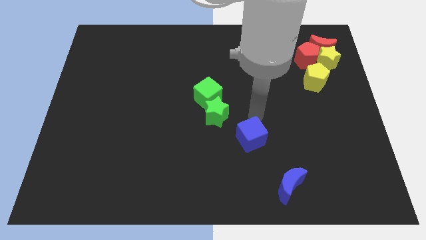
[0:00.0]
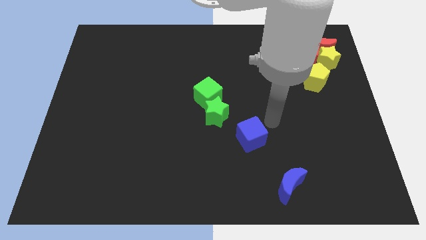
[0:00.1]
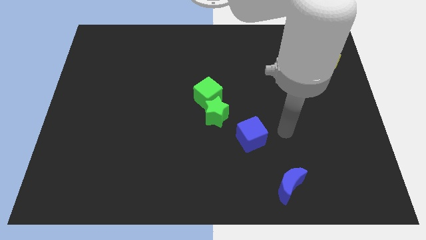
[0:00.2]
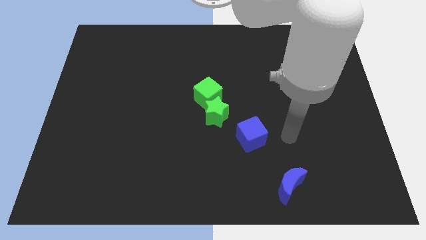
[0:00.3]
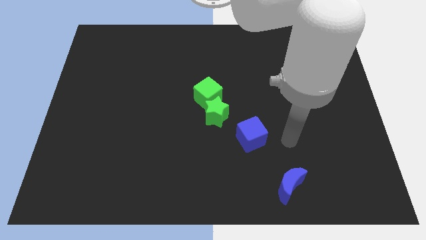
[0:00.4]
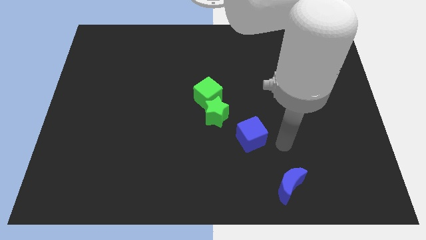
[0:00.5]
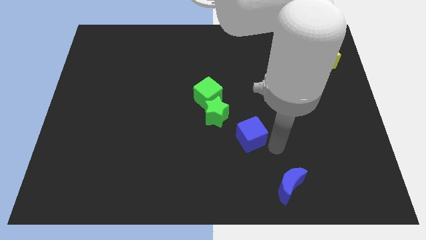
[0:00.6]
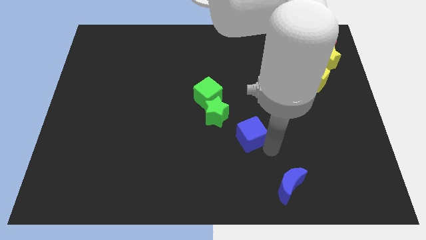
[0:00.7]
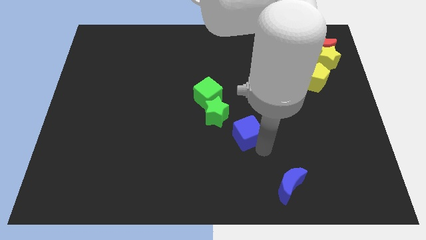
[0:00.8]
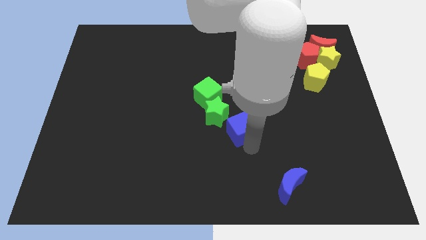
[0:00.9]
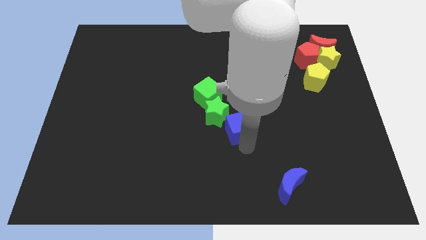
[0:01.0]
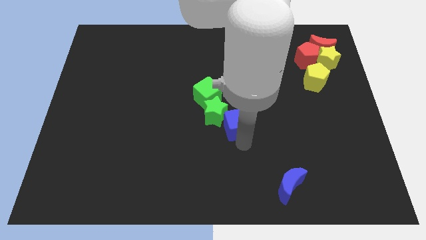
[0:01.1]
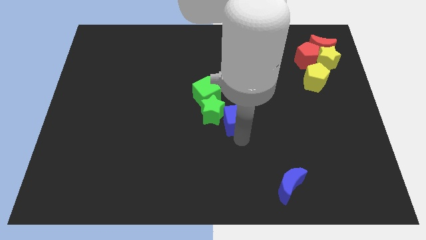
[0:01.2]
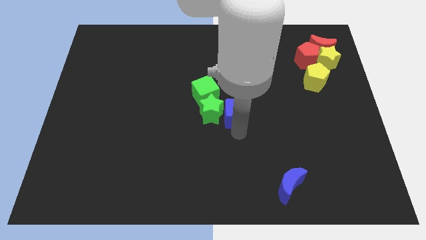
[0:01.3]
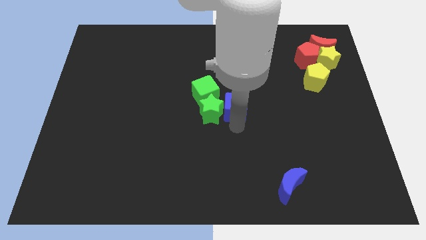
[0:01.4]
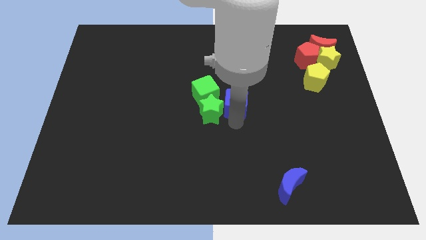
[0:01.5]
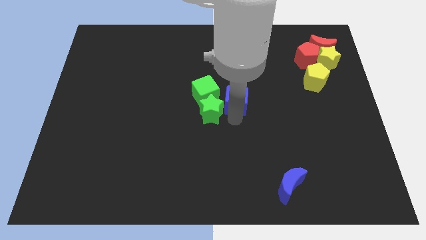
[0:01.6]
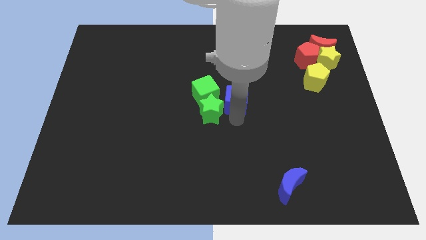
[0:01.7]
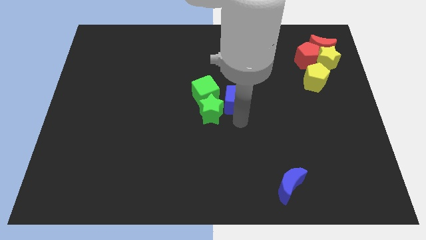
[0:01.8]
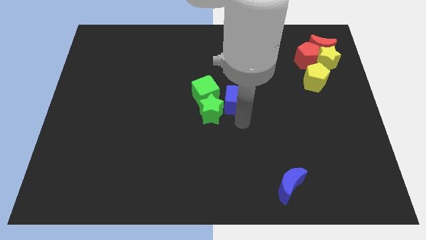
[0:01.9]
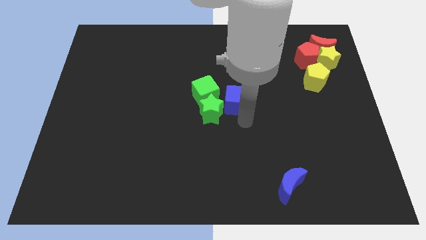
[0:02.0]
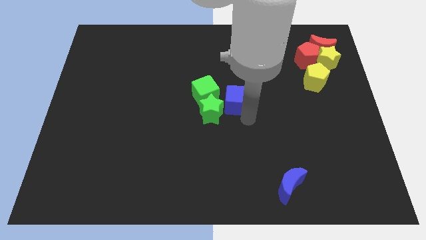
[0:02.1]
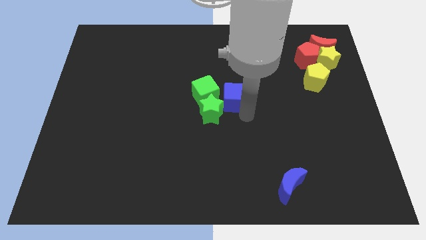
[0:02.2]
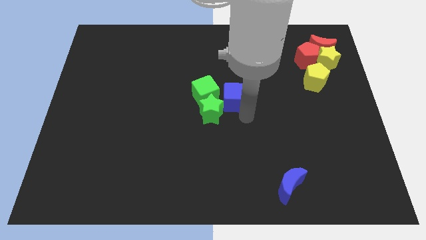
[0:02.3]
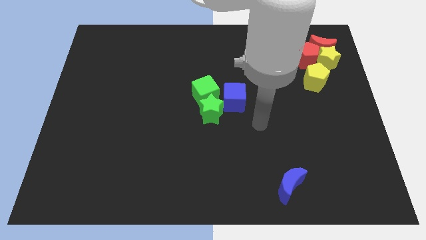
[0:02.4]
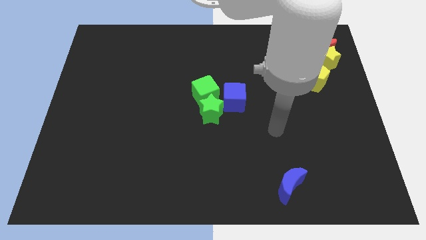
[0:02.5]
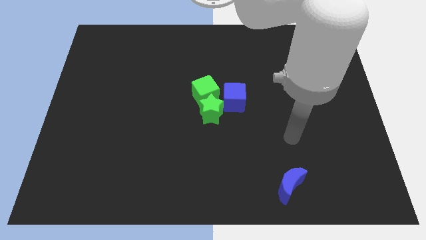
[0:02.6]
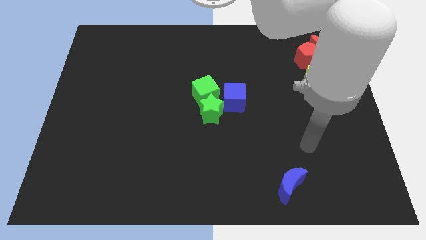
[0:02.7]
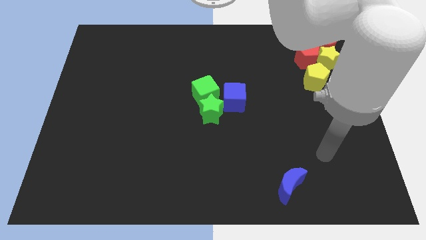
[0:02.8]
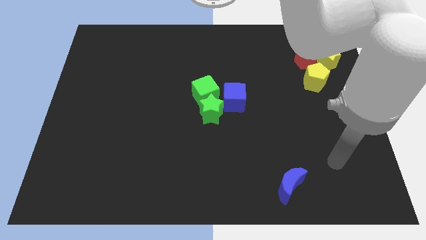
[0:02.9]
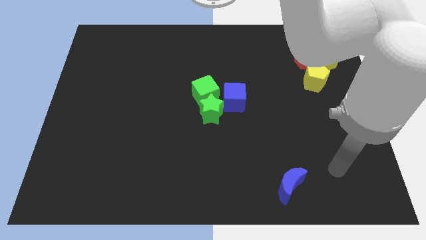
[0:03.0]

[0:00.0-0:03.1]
push blue cube into green blocks

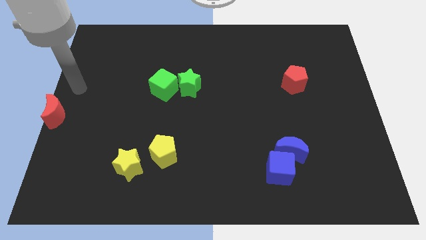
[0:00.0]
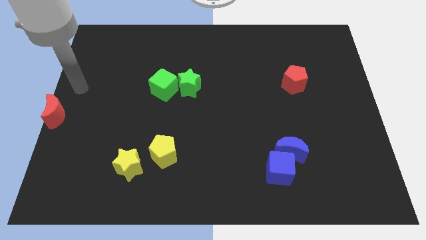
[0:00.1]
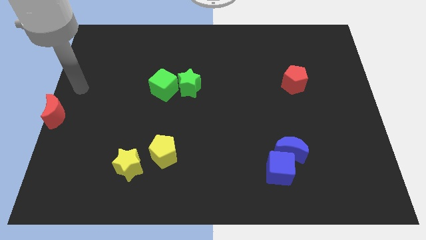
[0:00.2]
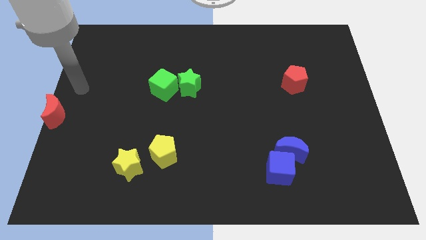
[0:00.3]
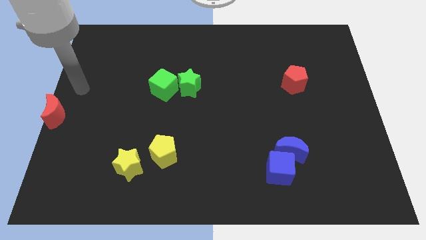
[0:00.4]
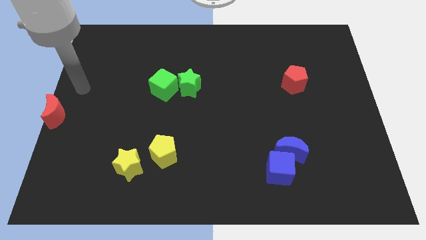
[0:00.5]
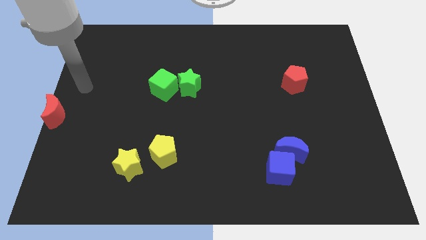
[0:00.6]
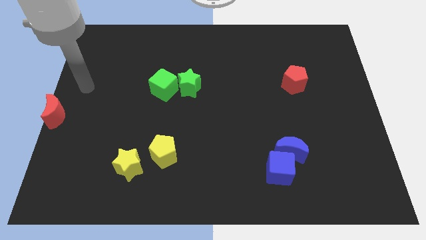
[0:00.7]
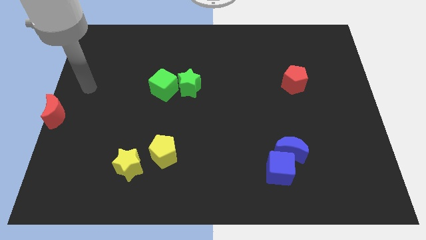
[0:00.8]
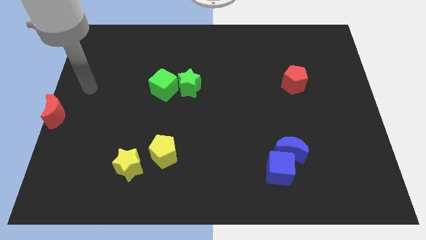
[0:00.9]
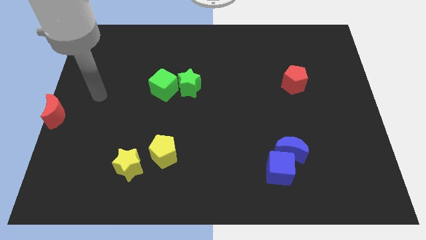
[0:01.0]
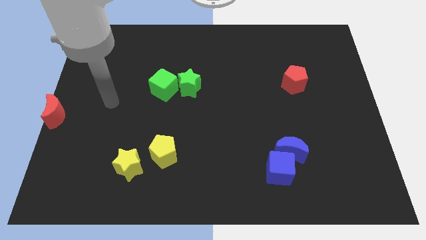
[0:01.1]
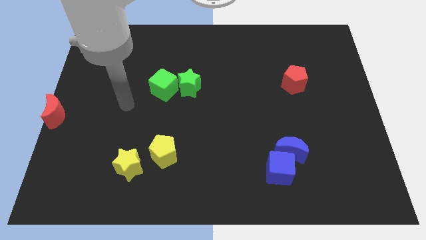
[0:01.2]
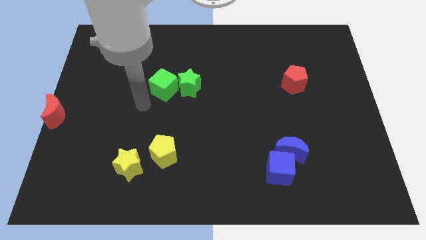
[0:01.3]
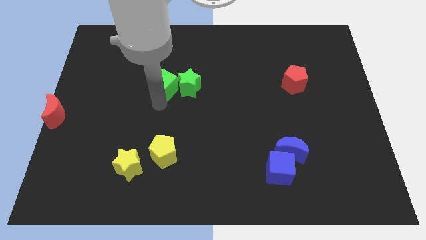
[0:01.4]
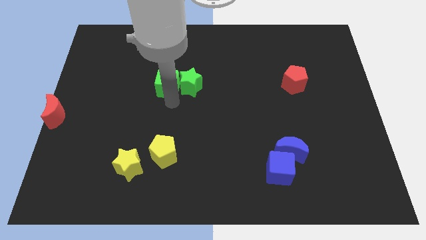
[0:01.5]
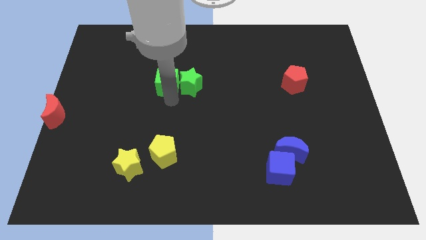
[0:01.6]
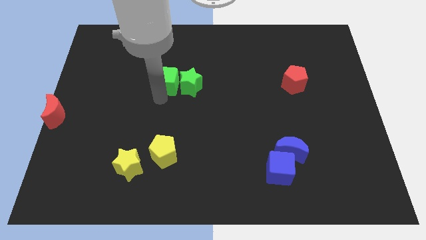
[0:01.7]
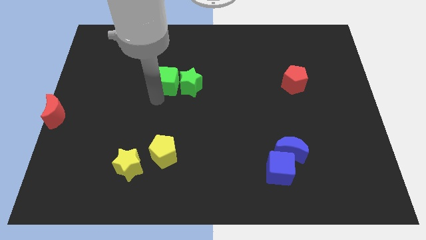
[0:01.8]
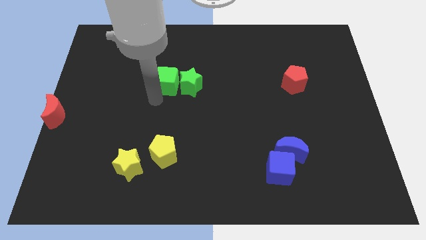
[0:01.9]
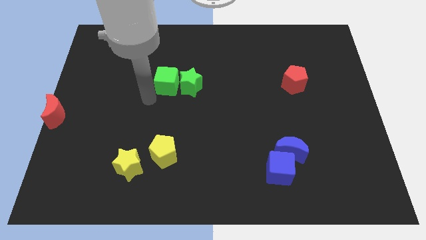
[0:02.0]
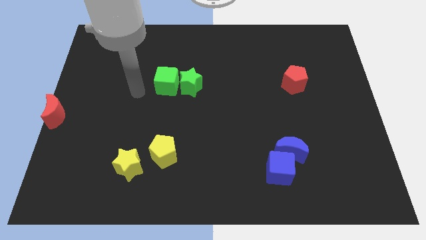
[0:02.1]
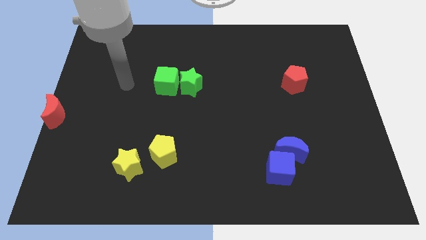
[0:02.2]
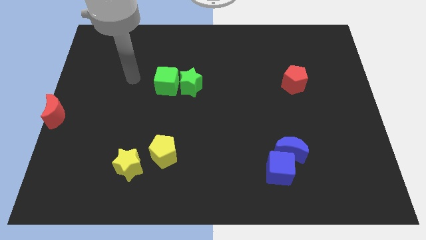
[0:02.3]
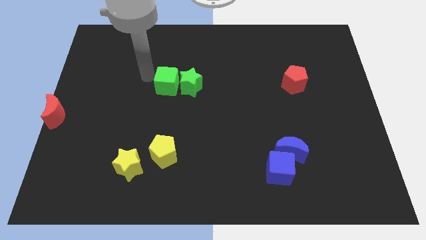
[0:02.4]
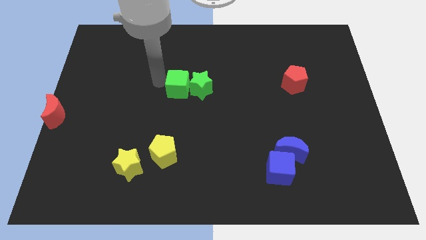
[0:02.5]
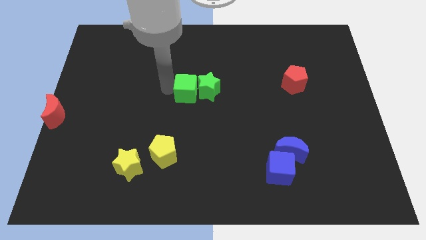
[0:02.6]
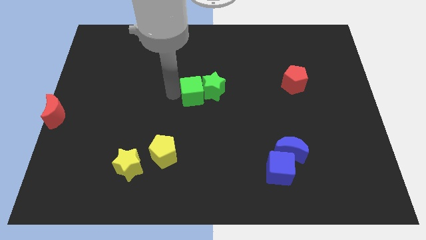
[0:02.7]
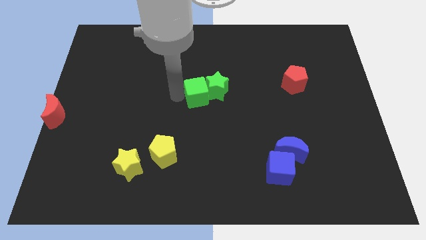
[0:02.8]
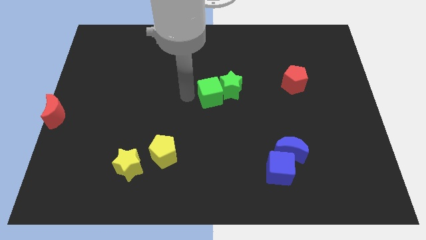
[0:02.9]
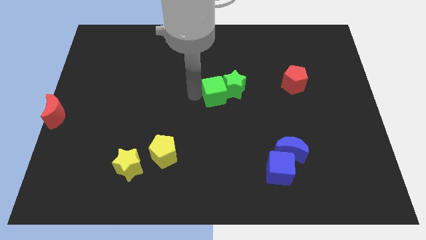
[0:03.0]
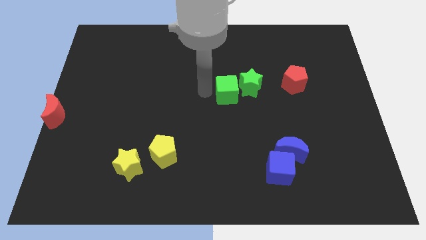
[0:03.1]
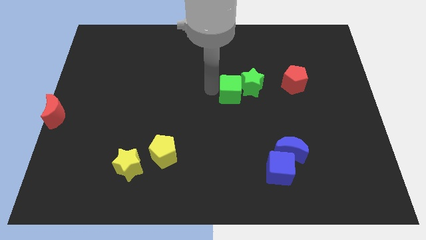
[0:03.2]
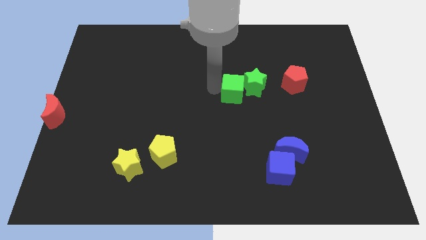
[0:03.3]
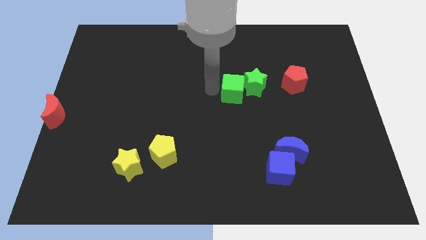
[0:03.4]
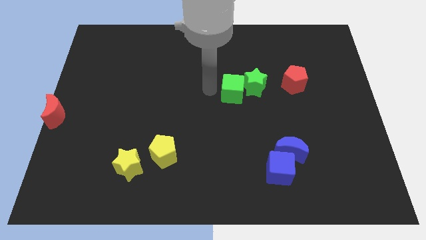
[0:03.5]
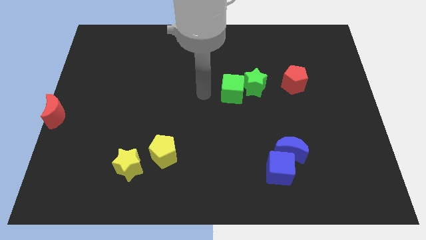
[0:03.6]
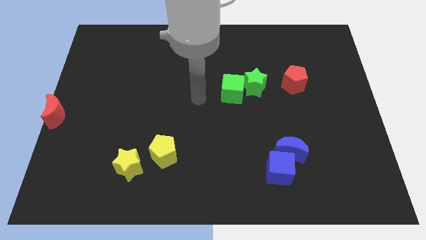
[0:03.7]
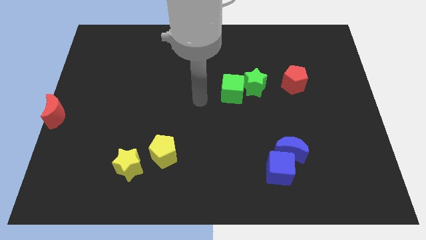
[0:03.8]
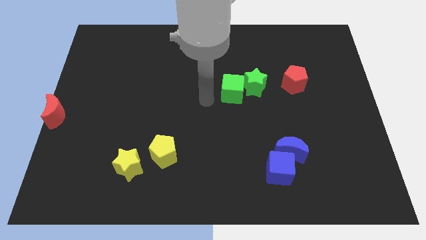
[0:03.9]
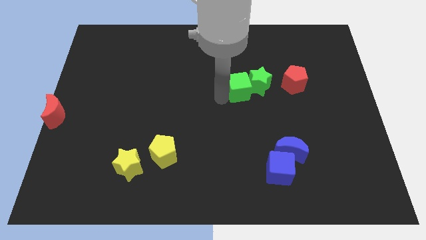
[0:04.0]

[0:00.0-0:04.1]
move the green blocks towards the red pentagon

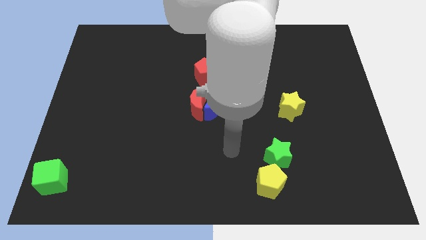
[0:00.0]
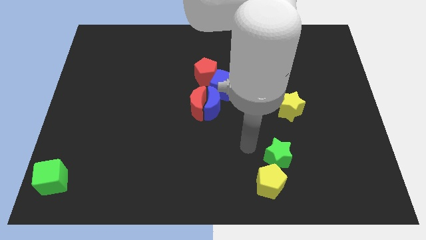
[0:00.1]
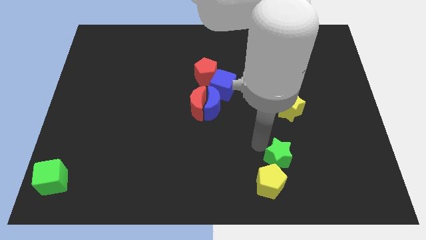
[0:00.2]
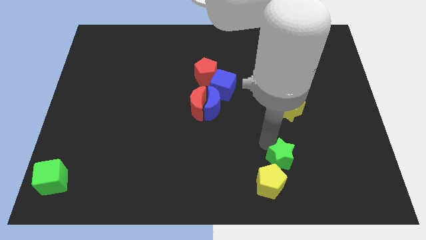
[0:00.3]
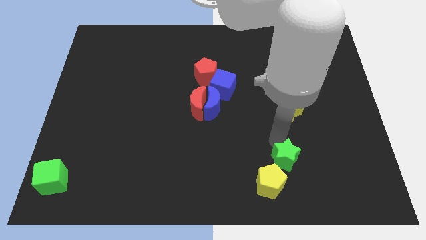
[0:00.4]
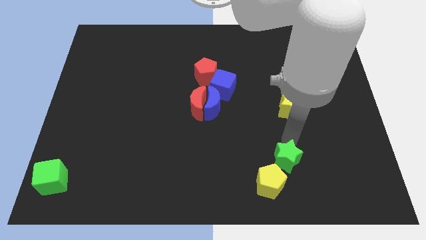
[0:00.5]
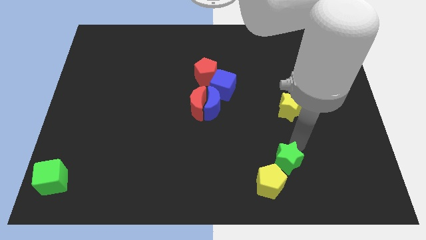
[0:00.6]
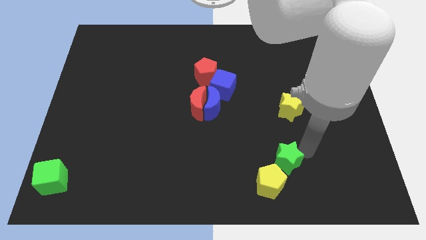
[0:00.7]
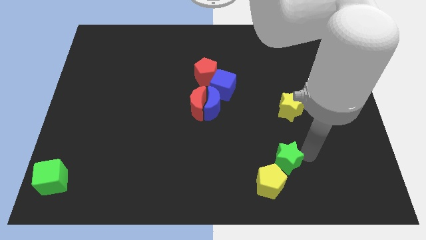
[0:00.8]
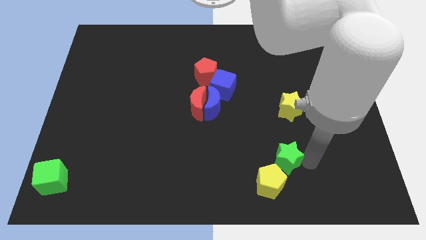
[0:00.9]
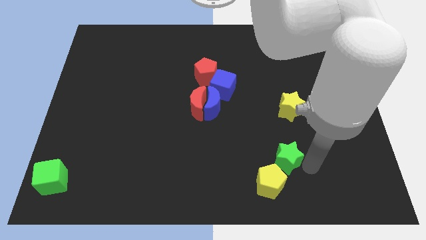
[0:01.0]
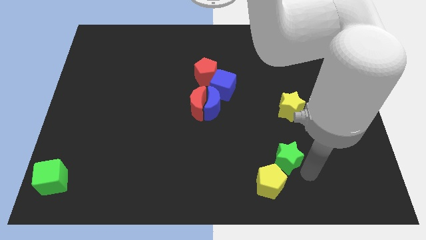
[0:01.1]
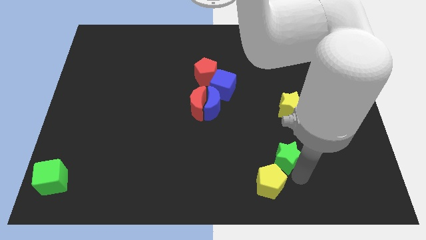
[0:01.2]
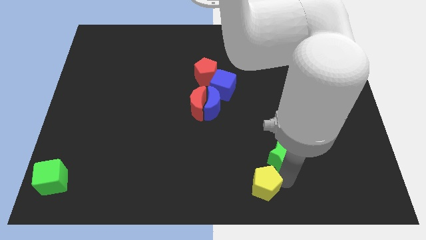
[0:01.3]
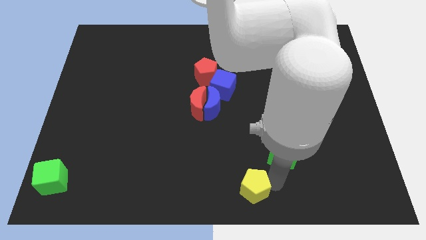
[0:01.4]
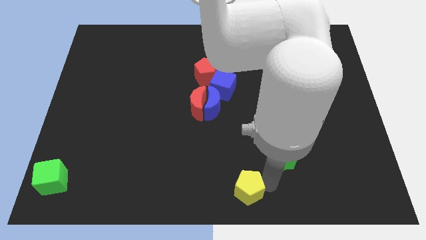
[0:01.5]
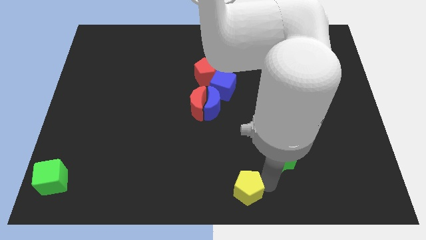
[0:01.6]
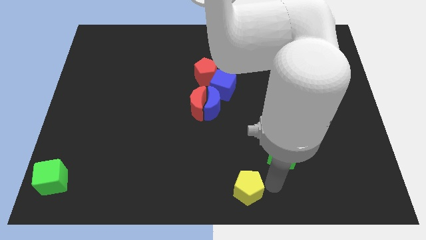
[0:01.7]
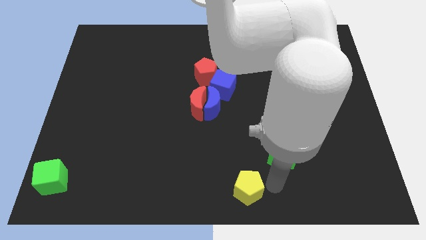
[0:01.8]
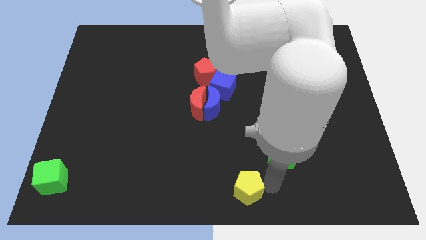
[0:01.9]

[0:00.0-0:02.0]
separate the yellow pentagon from the green star
